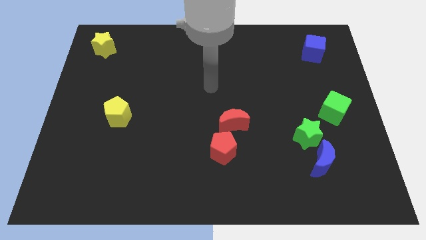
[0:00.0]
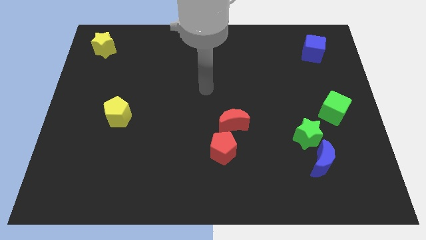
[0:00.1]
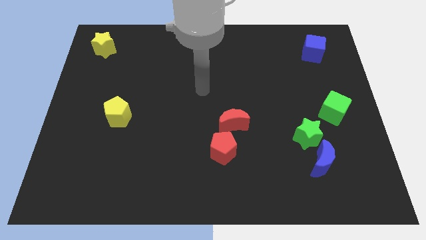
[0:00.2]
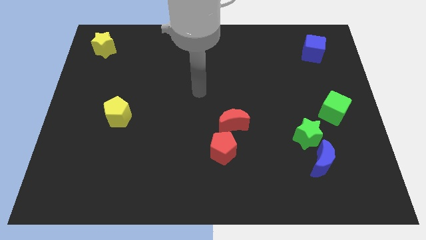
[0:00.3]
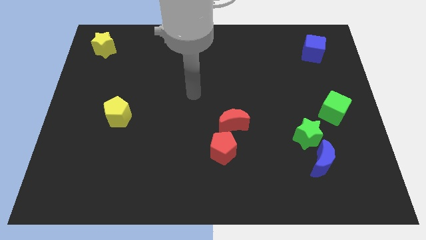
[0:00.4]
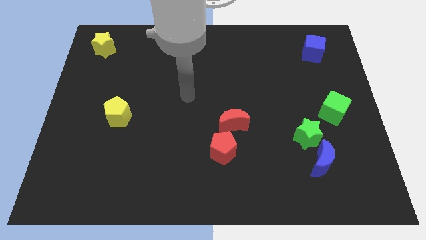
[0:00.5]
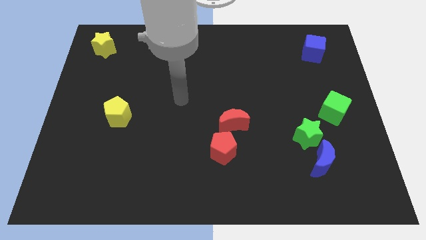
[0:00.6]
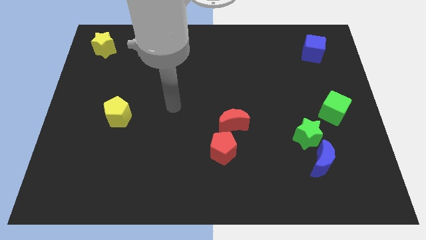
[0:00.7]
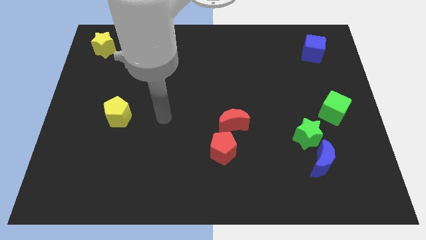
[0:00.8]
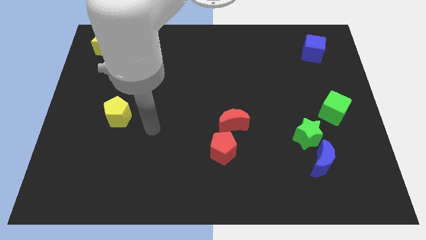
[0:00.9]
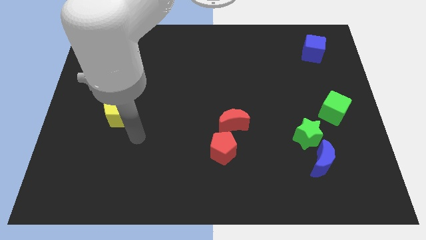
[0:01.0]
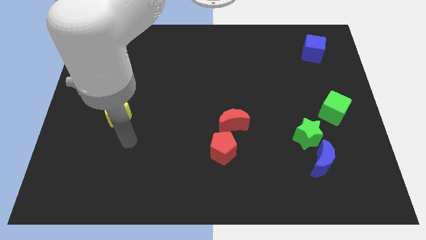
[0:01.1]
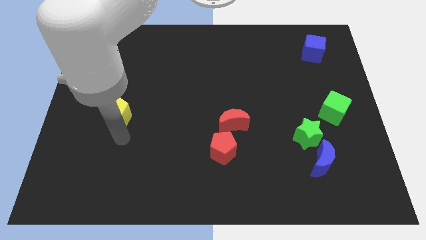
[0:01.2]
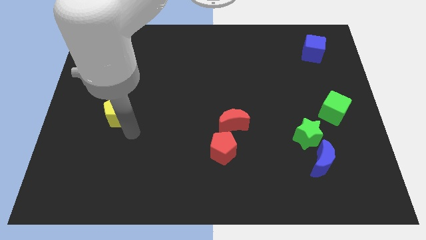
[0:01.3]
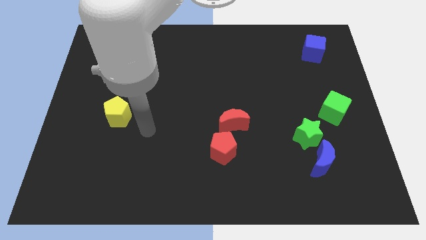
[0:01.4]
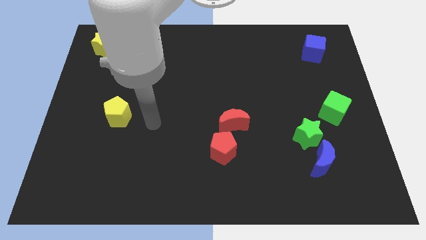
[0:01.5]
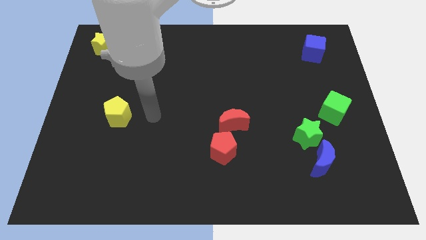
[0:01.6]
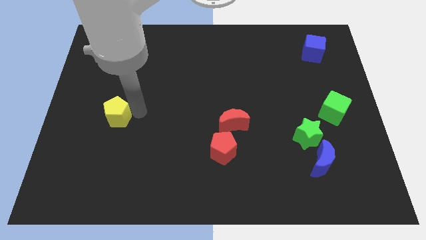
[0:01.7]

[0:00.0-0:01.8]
move your arm to the right of the yellow pentagon

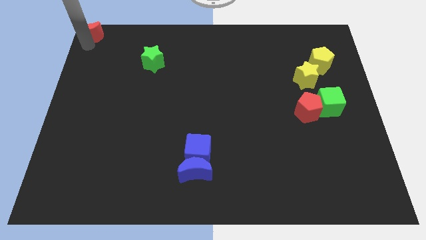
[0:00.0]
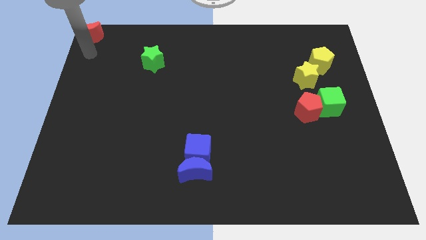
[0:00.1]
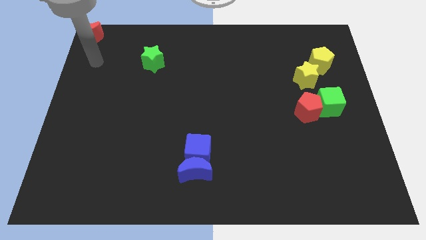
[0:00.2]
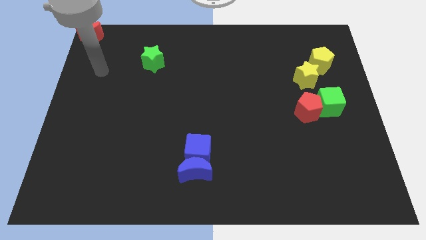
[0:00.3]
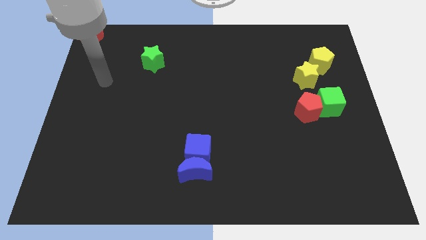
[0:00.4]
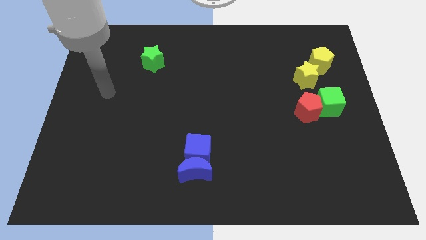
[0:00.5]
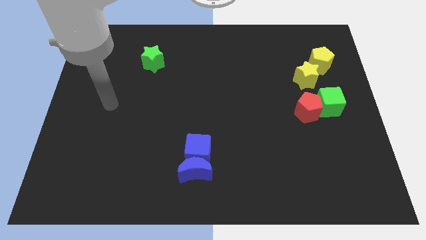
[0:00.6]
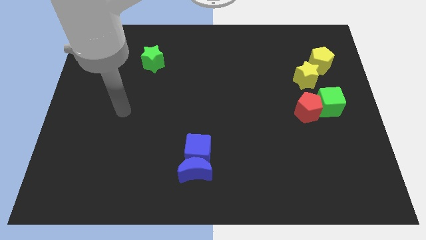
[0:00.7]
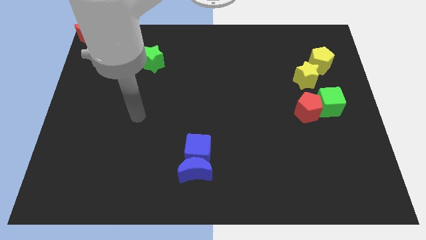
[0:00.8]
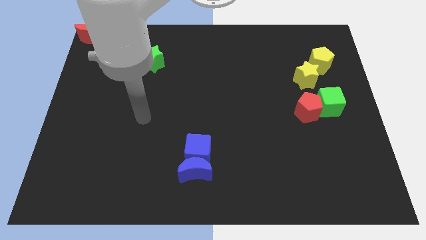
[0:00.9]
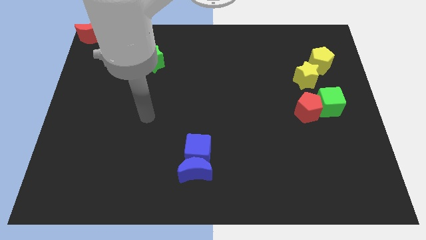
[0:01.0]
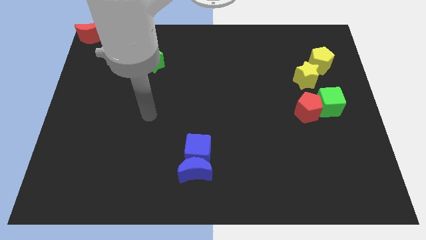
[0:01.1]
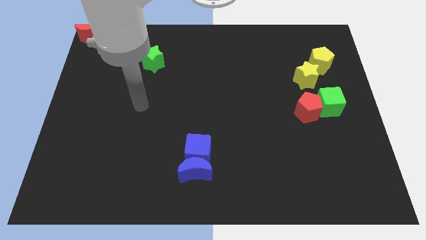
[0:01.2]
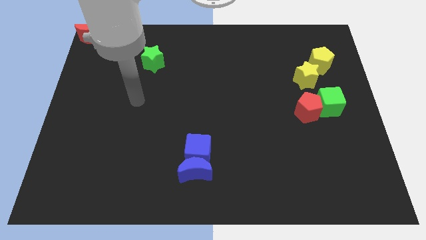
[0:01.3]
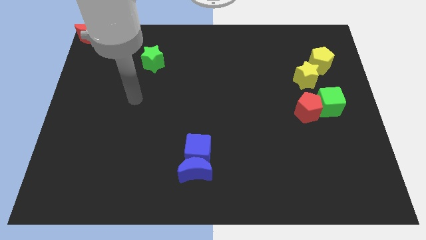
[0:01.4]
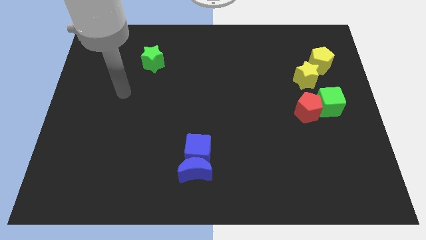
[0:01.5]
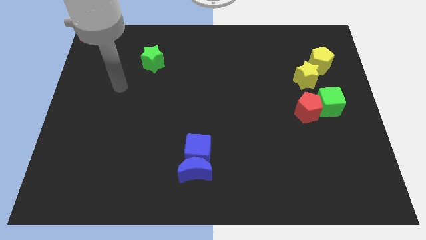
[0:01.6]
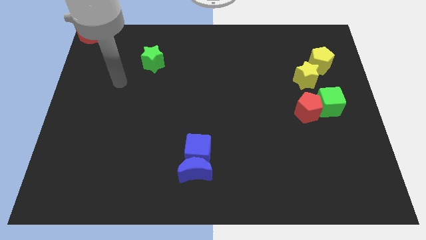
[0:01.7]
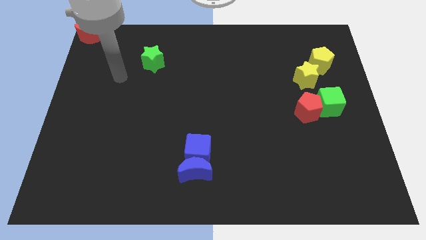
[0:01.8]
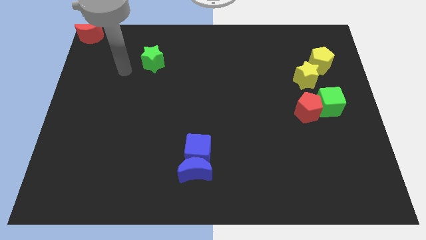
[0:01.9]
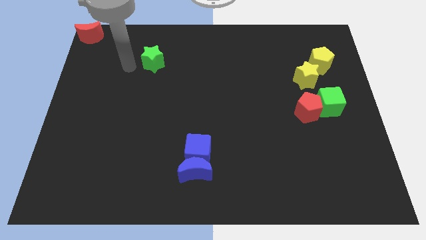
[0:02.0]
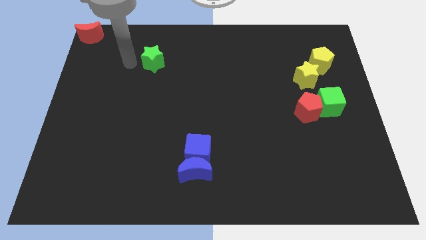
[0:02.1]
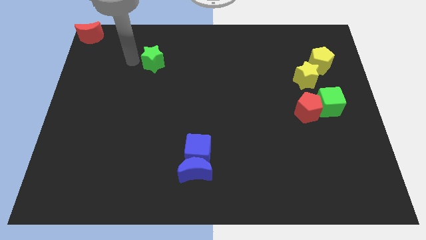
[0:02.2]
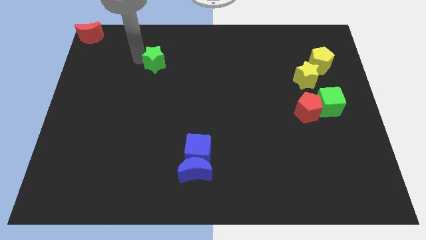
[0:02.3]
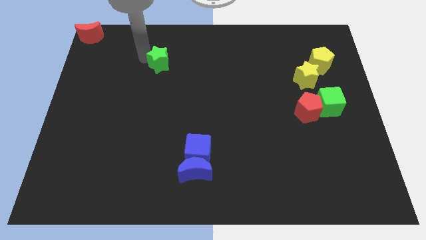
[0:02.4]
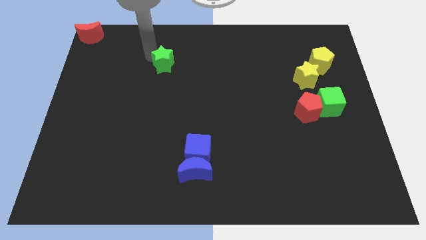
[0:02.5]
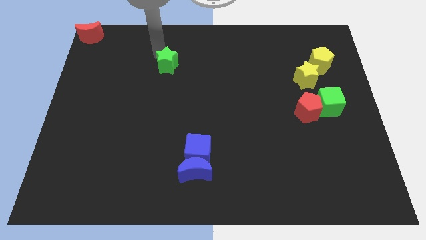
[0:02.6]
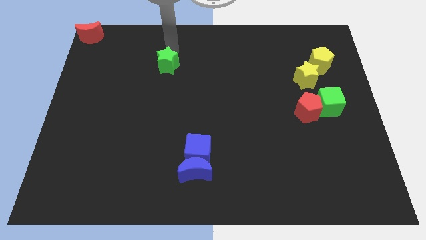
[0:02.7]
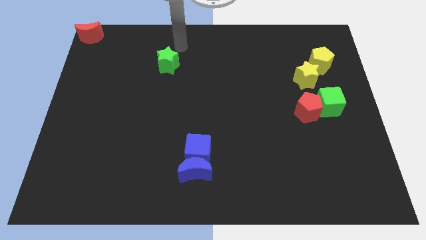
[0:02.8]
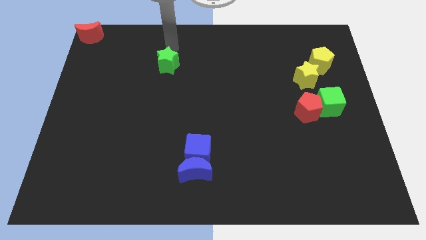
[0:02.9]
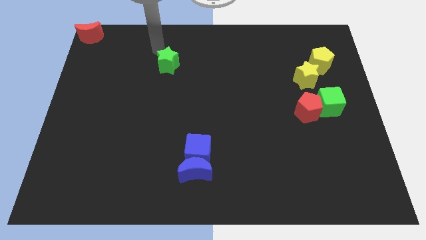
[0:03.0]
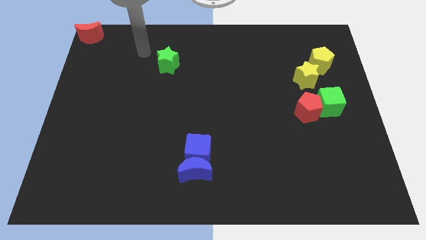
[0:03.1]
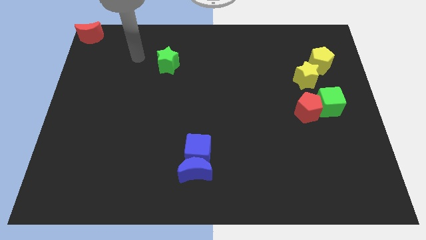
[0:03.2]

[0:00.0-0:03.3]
slightly move green star to its right

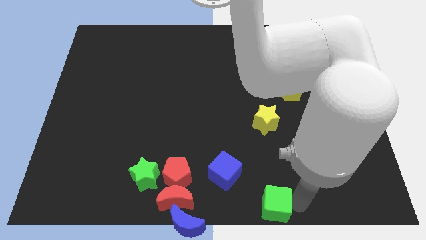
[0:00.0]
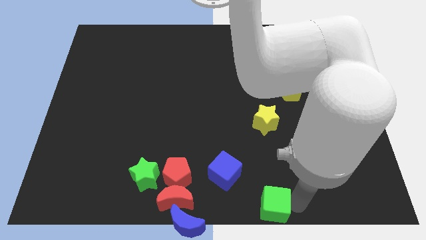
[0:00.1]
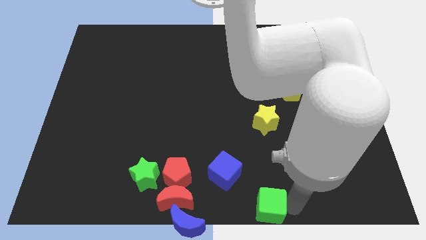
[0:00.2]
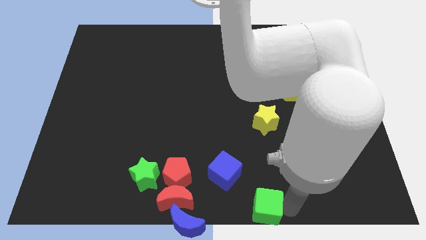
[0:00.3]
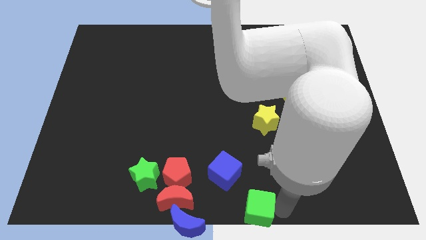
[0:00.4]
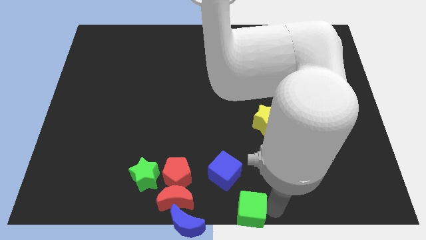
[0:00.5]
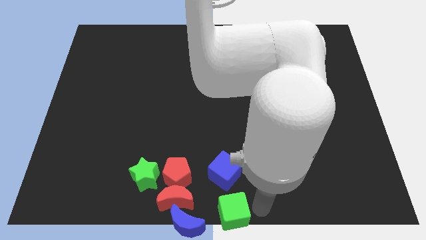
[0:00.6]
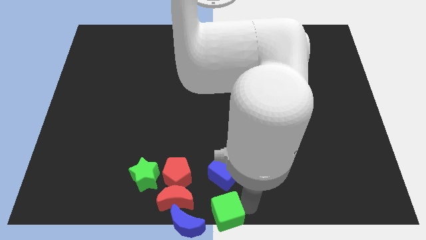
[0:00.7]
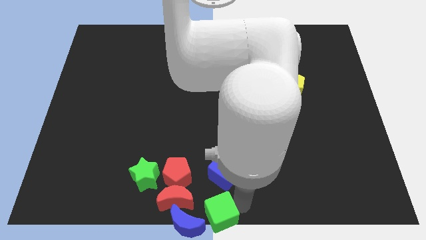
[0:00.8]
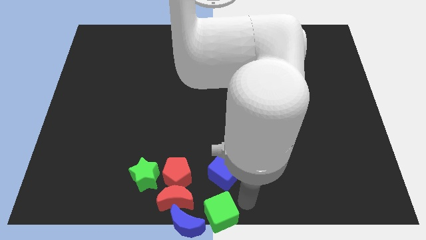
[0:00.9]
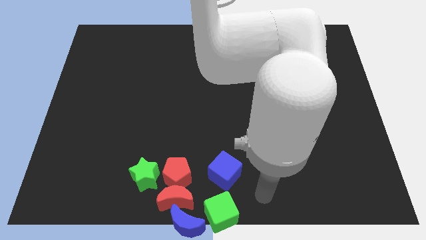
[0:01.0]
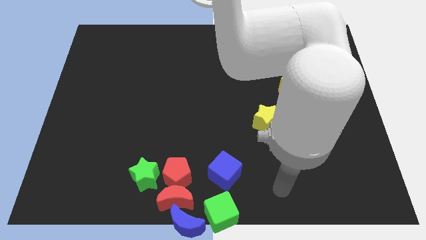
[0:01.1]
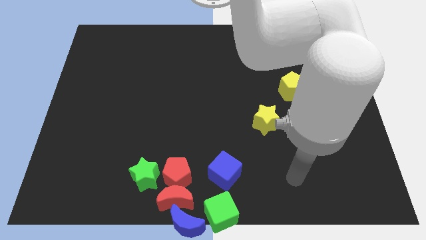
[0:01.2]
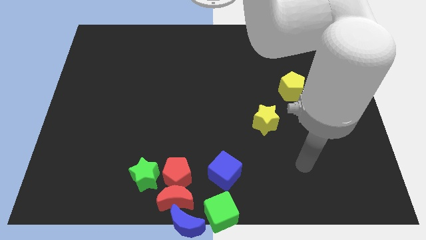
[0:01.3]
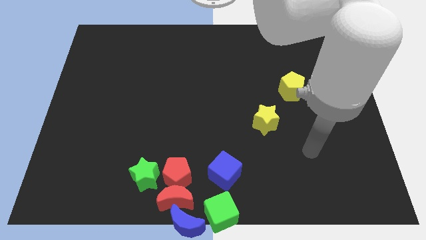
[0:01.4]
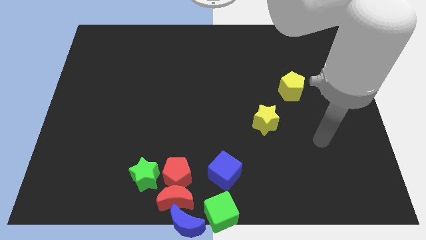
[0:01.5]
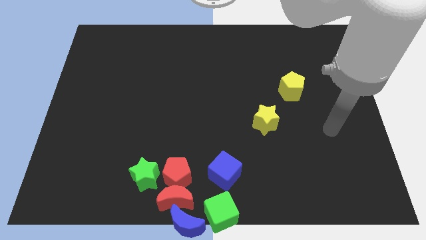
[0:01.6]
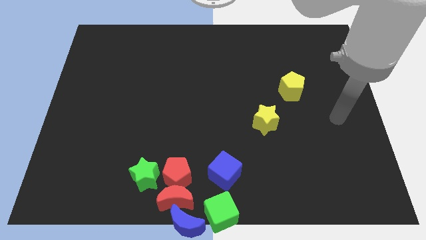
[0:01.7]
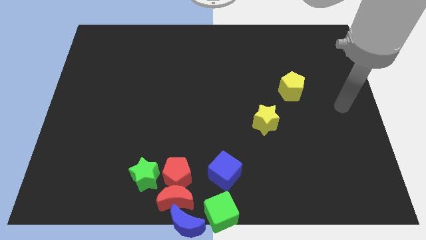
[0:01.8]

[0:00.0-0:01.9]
place the green cube at the bottom center

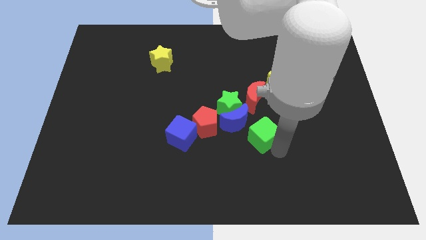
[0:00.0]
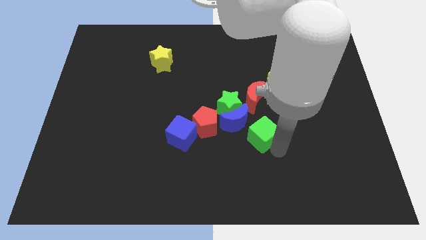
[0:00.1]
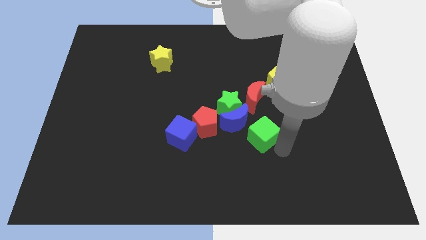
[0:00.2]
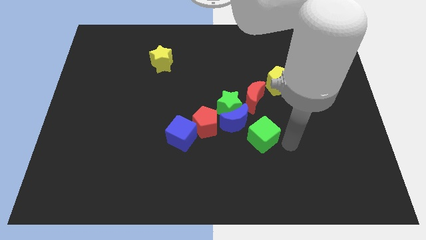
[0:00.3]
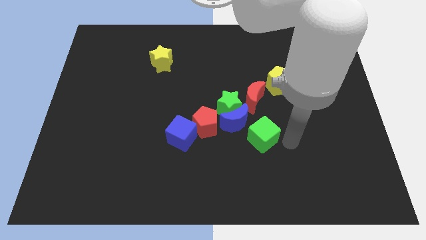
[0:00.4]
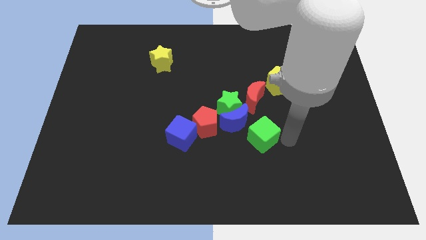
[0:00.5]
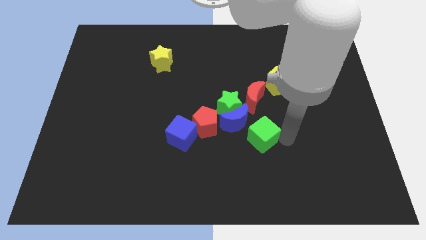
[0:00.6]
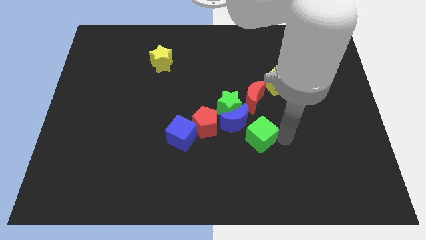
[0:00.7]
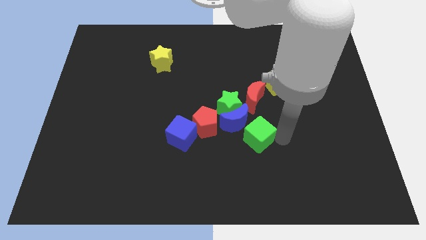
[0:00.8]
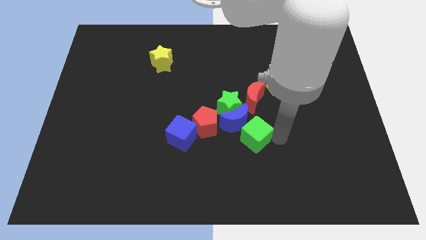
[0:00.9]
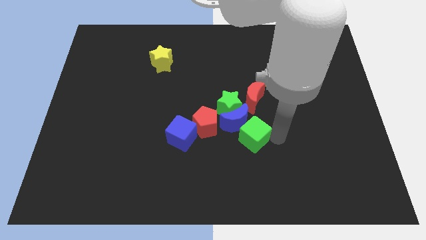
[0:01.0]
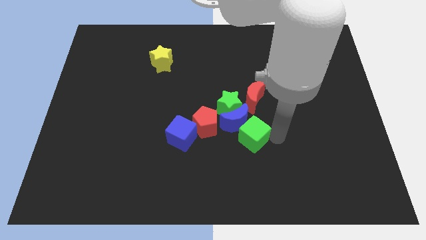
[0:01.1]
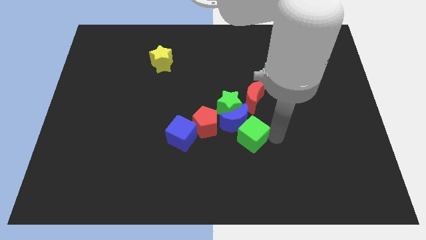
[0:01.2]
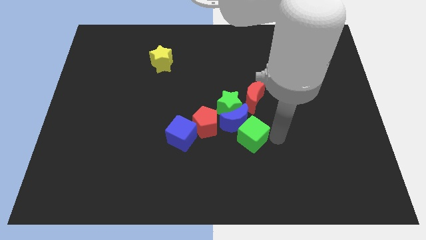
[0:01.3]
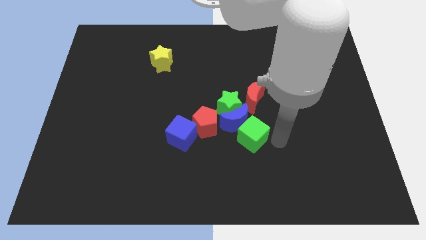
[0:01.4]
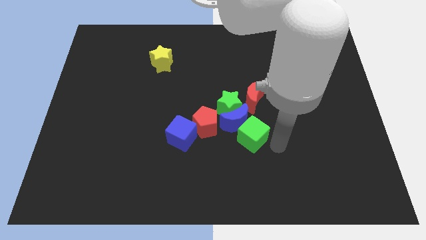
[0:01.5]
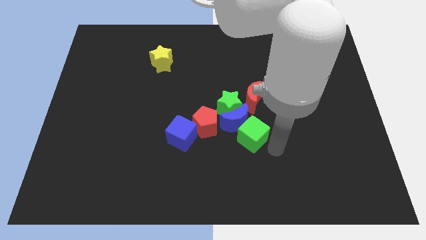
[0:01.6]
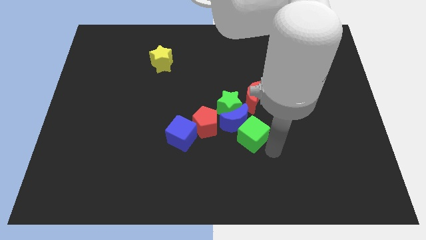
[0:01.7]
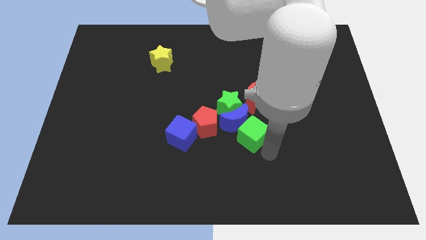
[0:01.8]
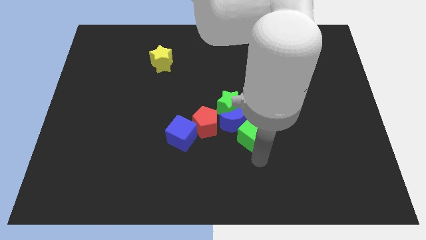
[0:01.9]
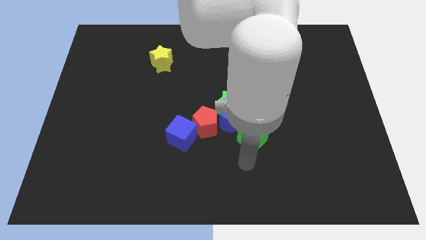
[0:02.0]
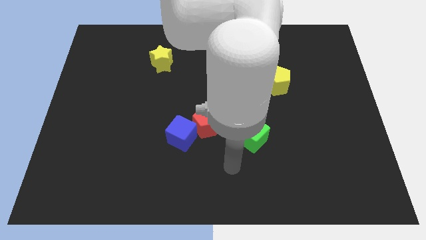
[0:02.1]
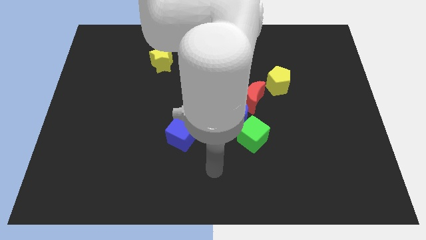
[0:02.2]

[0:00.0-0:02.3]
move the green cube close to the blue moon
